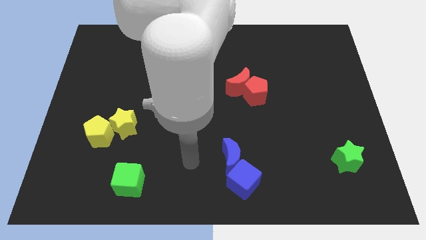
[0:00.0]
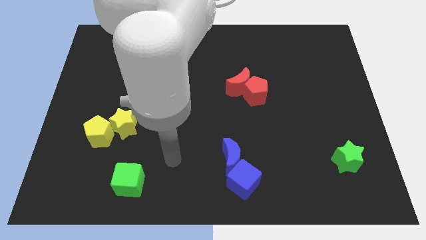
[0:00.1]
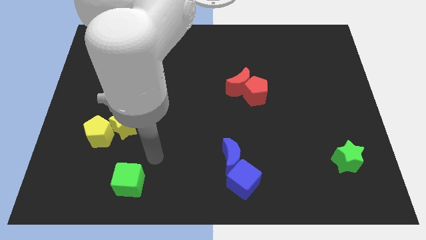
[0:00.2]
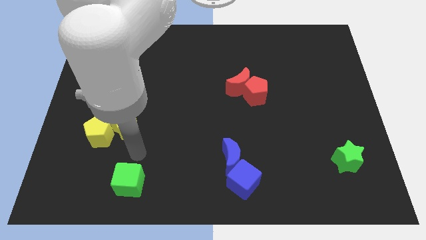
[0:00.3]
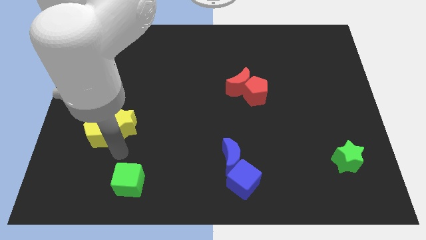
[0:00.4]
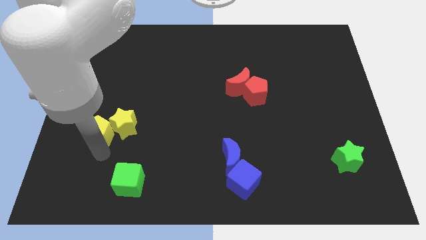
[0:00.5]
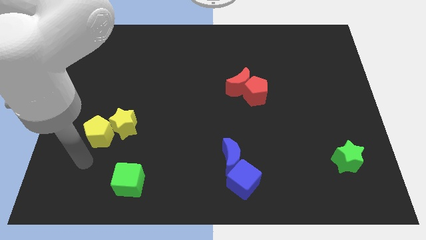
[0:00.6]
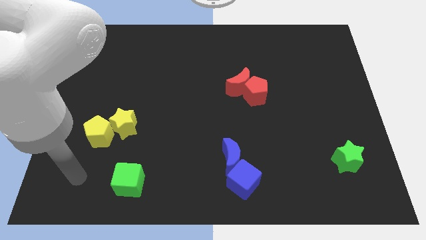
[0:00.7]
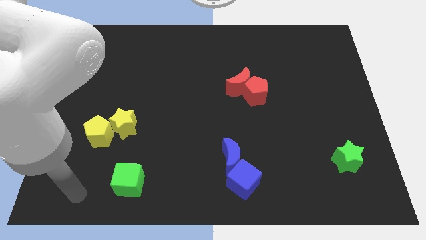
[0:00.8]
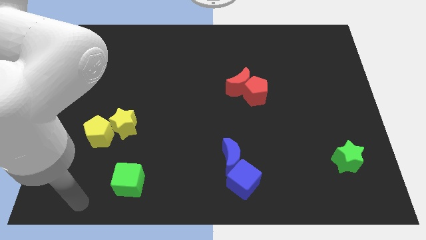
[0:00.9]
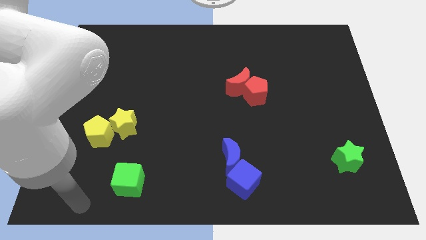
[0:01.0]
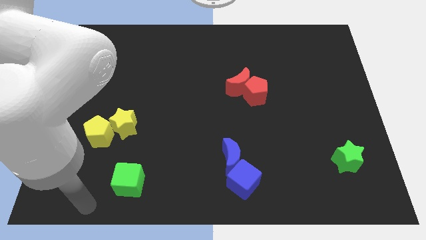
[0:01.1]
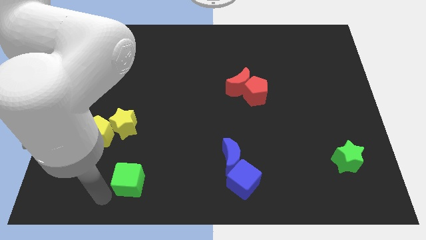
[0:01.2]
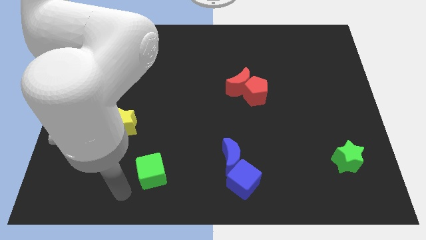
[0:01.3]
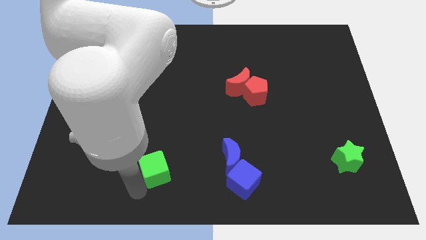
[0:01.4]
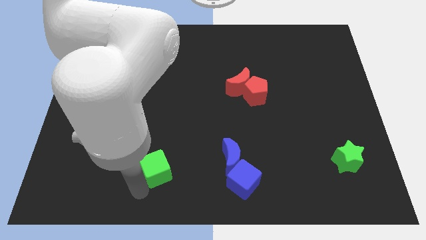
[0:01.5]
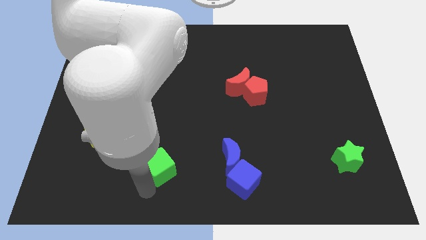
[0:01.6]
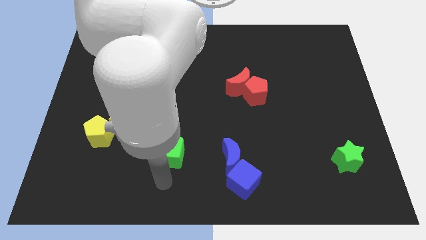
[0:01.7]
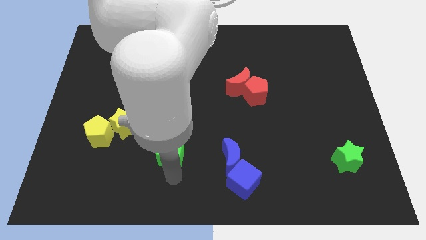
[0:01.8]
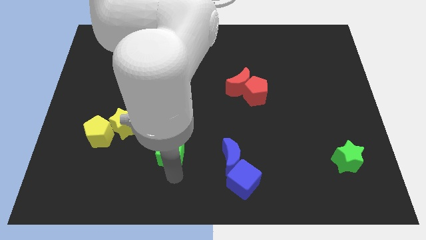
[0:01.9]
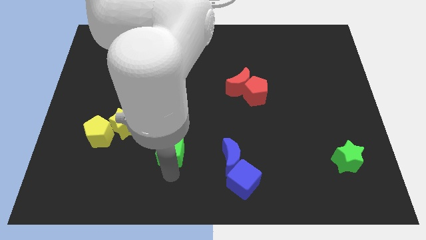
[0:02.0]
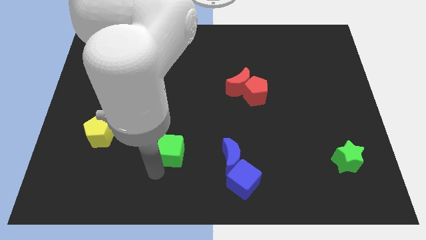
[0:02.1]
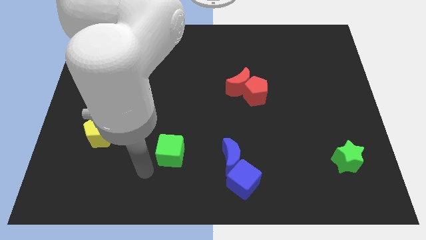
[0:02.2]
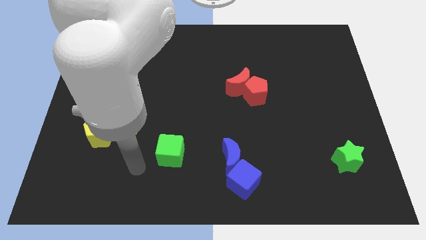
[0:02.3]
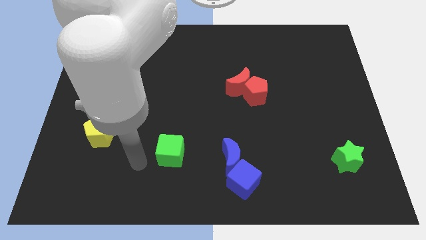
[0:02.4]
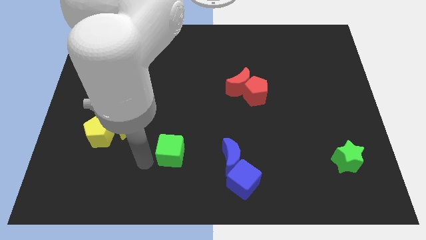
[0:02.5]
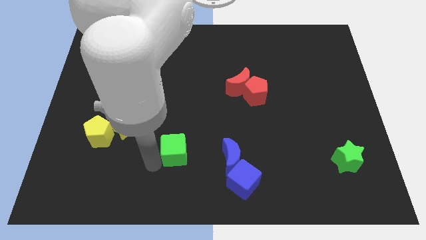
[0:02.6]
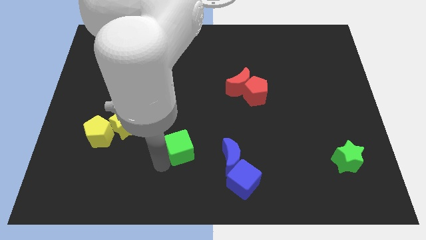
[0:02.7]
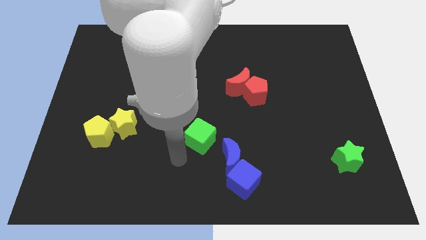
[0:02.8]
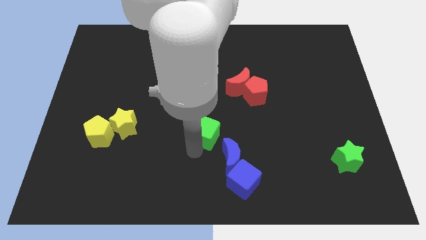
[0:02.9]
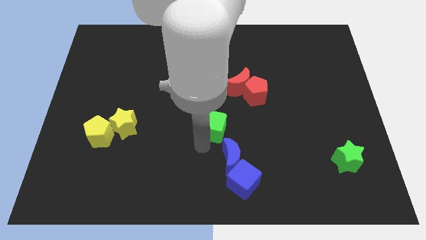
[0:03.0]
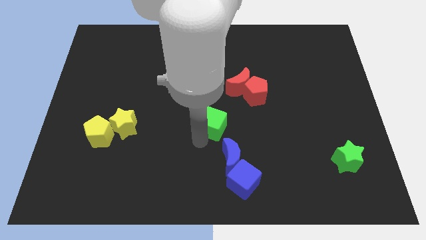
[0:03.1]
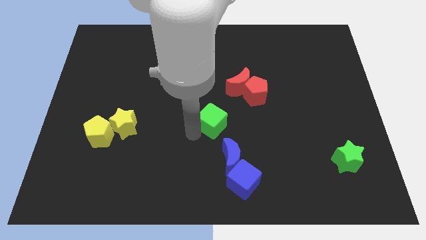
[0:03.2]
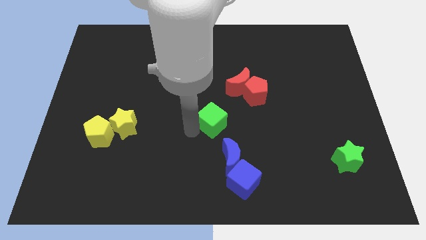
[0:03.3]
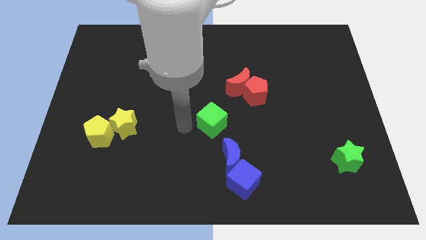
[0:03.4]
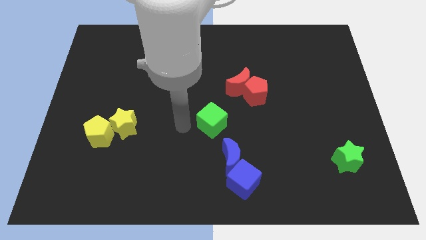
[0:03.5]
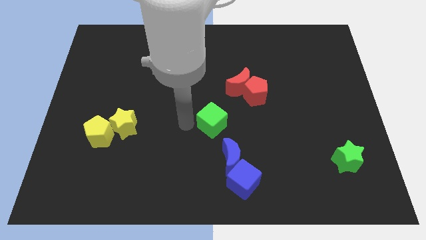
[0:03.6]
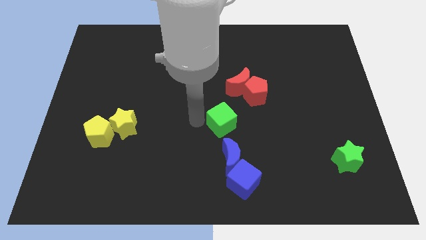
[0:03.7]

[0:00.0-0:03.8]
move the green cube to the top of the blue crescent

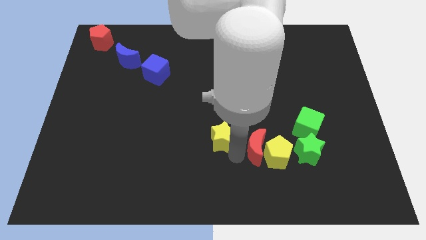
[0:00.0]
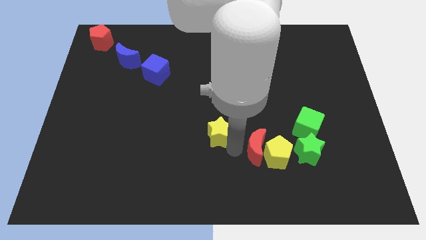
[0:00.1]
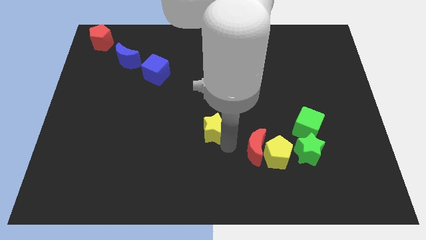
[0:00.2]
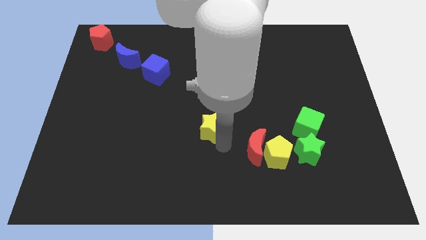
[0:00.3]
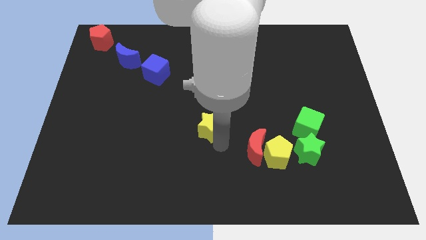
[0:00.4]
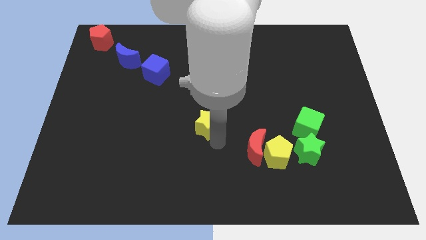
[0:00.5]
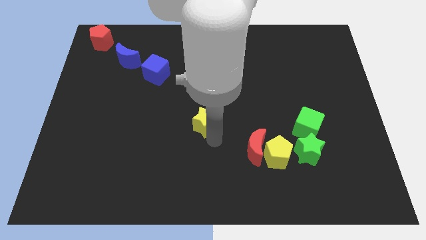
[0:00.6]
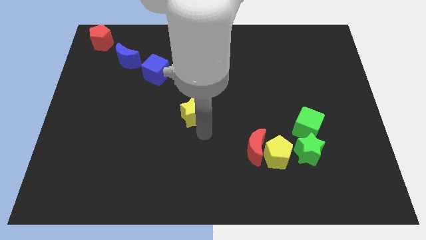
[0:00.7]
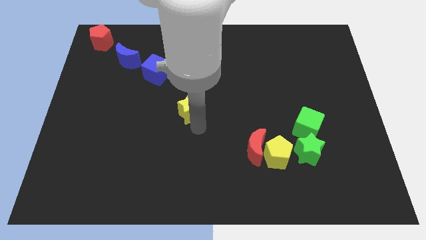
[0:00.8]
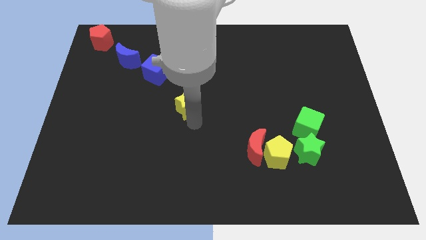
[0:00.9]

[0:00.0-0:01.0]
push the yellow star to the center of the board

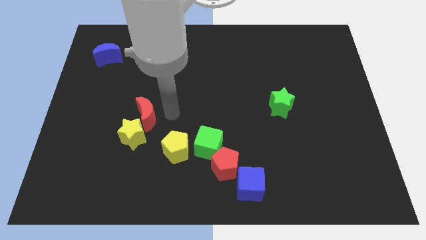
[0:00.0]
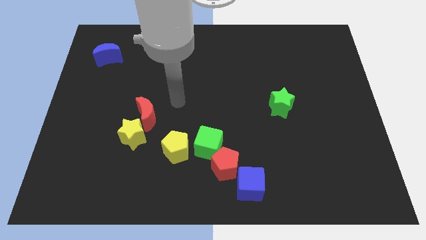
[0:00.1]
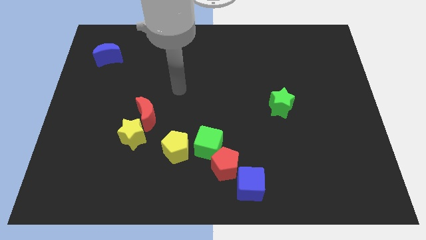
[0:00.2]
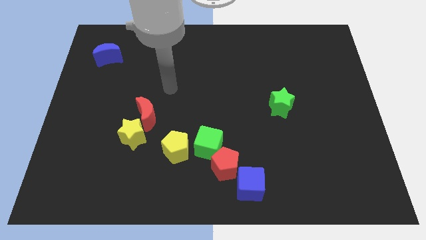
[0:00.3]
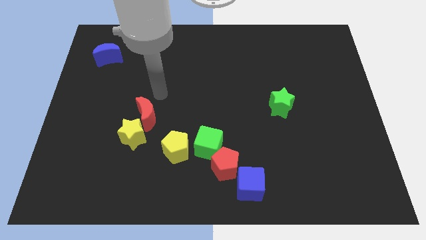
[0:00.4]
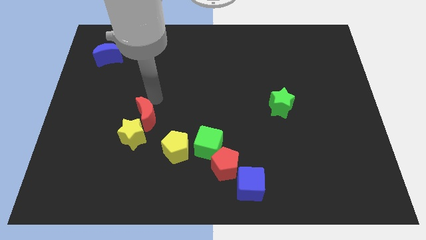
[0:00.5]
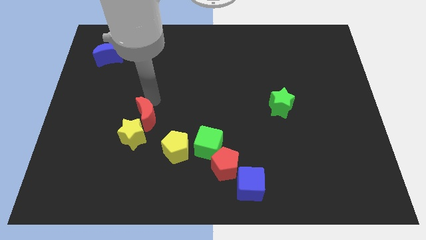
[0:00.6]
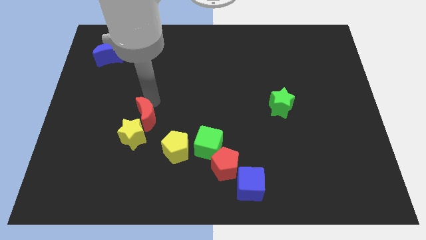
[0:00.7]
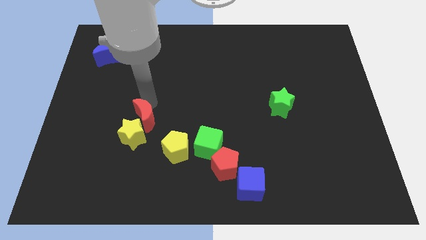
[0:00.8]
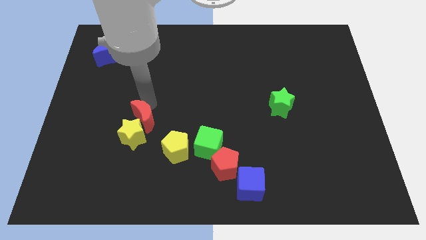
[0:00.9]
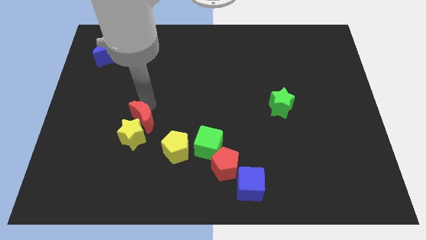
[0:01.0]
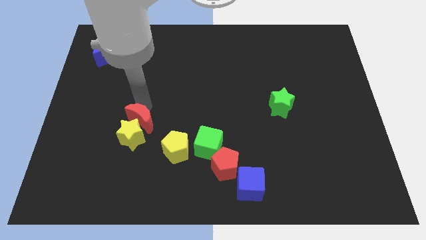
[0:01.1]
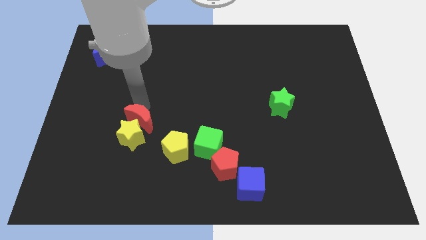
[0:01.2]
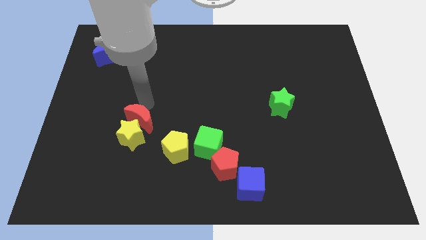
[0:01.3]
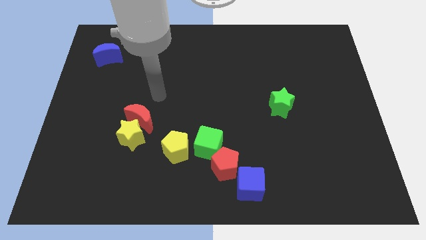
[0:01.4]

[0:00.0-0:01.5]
move the red crescent into the yellow star

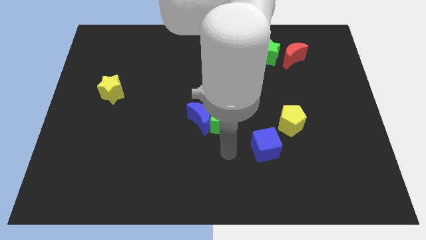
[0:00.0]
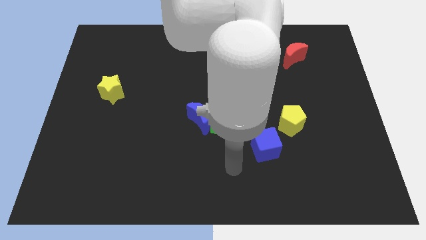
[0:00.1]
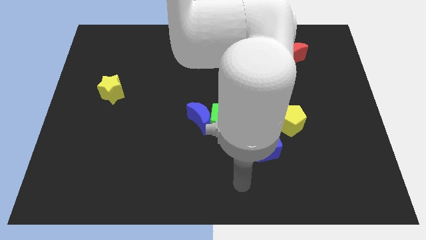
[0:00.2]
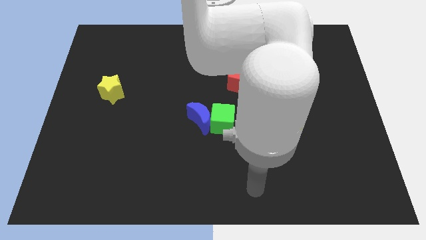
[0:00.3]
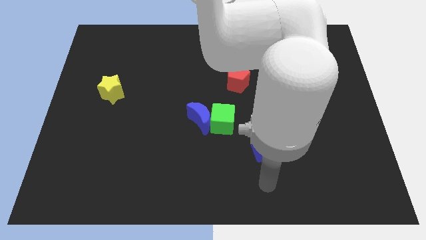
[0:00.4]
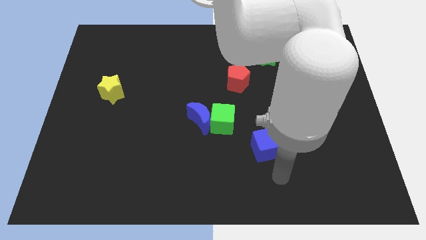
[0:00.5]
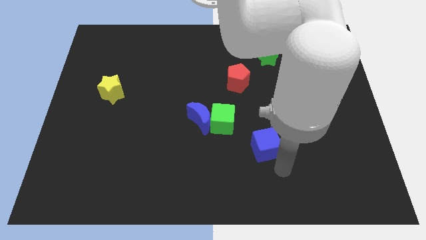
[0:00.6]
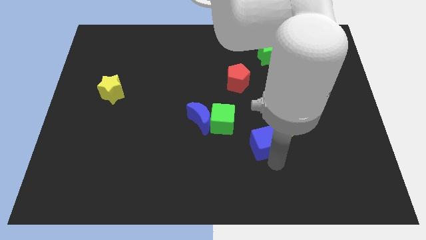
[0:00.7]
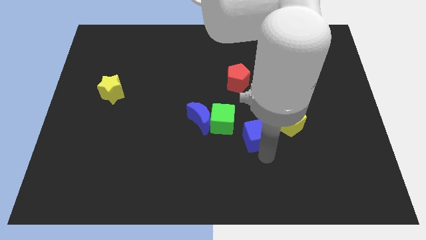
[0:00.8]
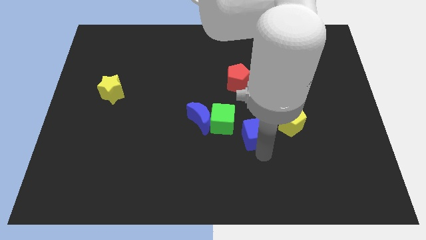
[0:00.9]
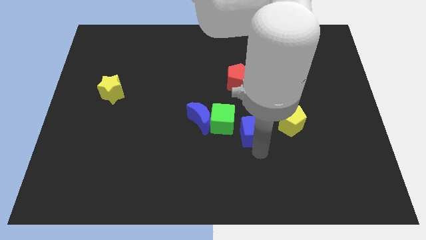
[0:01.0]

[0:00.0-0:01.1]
push the blue cube to the right of the green cube

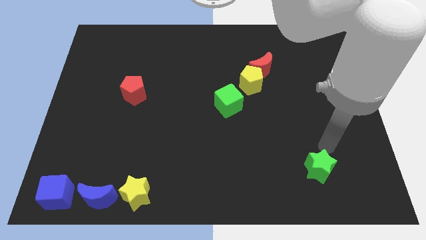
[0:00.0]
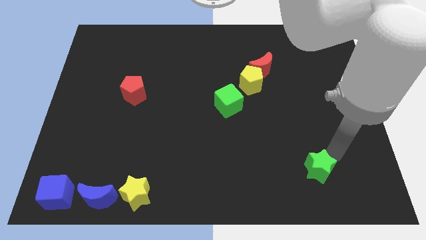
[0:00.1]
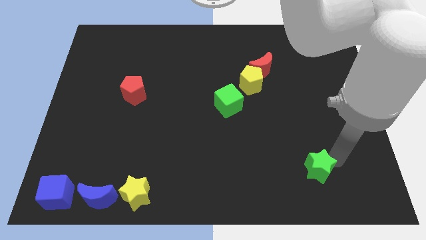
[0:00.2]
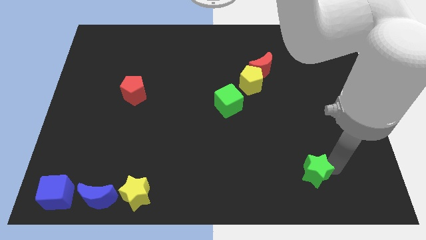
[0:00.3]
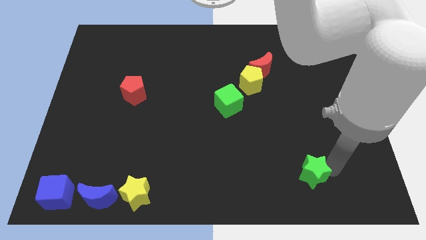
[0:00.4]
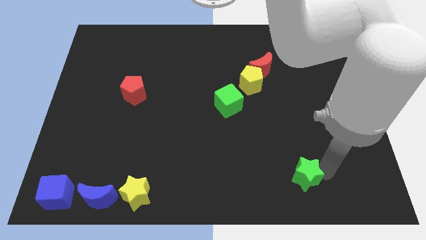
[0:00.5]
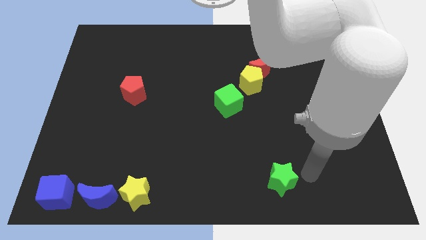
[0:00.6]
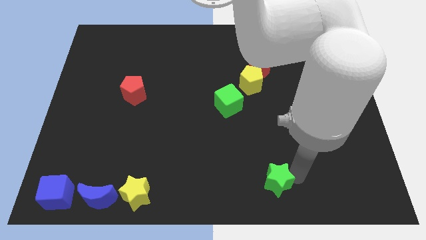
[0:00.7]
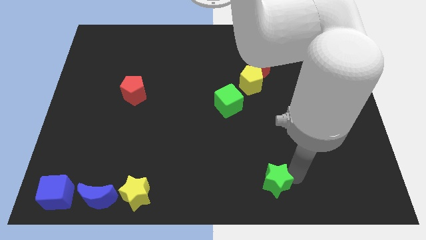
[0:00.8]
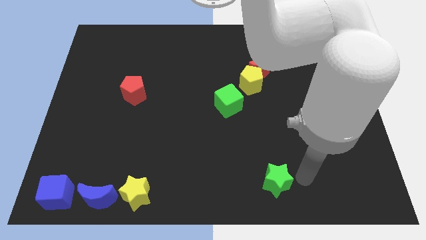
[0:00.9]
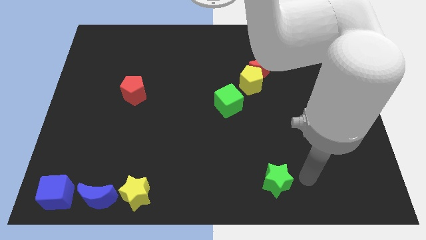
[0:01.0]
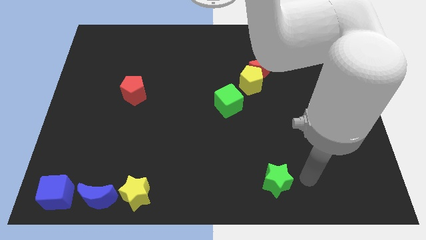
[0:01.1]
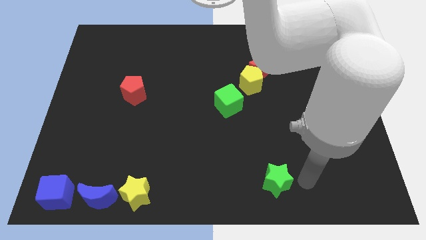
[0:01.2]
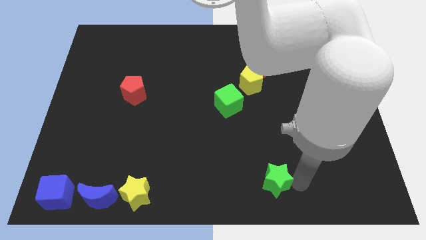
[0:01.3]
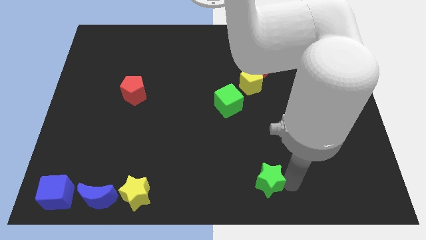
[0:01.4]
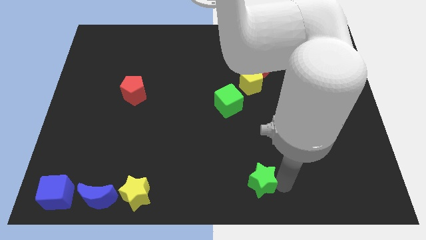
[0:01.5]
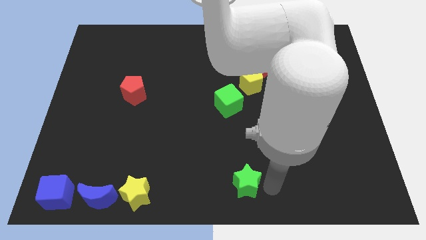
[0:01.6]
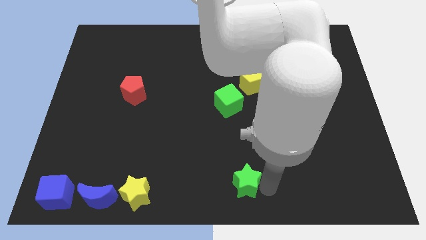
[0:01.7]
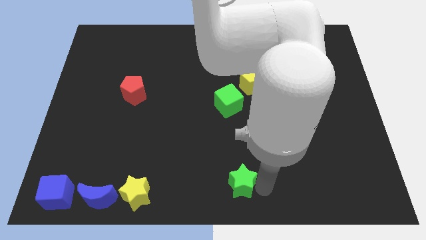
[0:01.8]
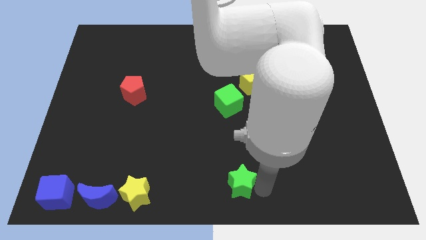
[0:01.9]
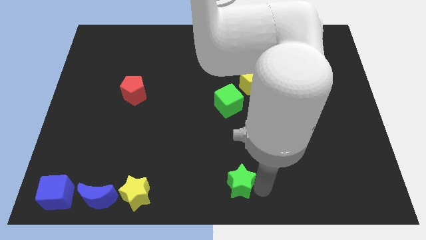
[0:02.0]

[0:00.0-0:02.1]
place green star below green cube
